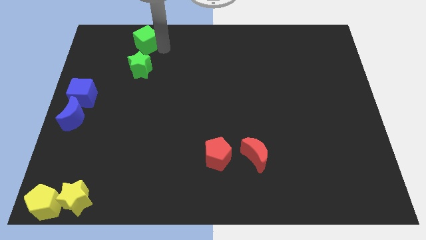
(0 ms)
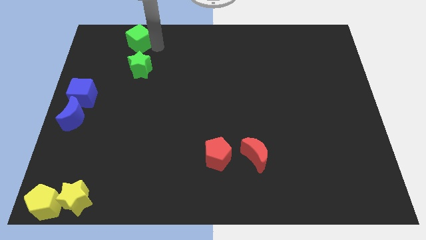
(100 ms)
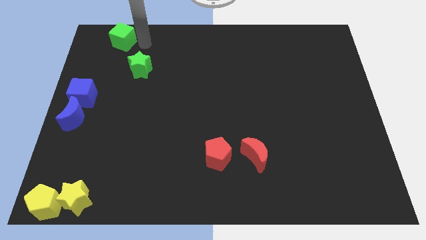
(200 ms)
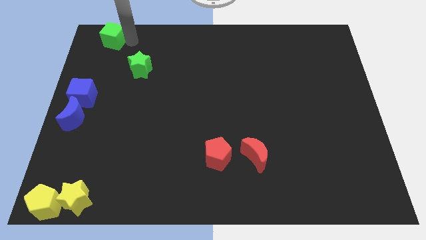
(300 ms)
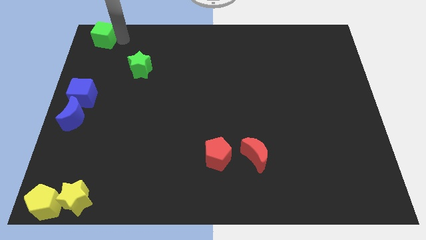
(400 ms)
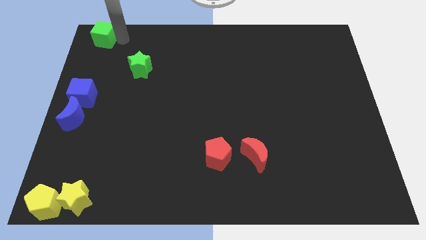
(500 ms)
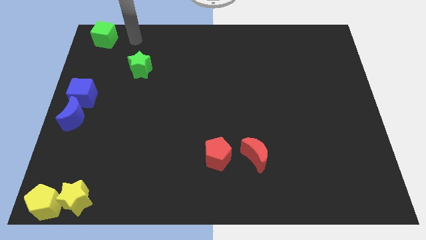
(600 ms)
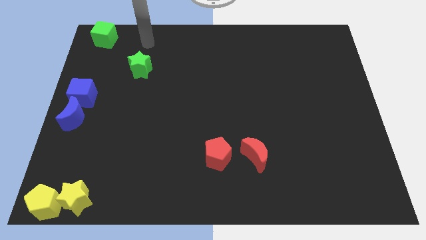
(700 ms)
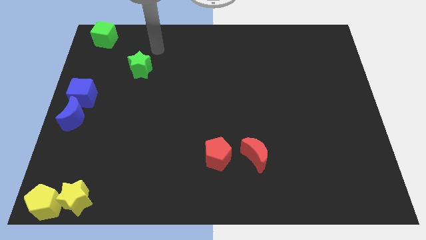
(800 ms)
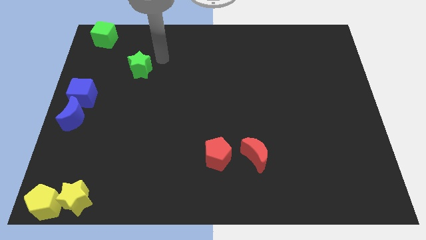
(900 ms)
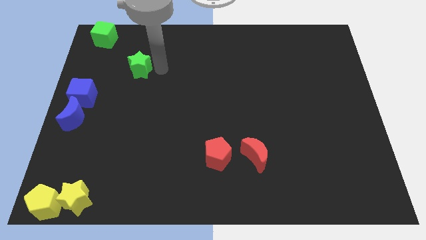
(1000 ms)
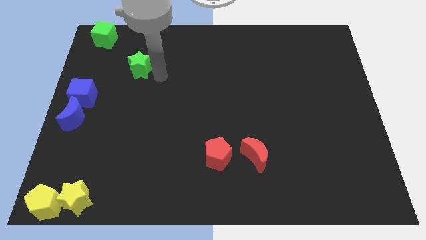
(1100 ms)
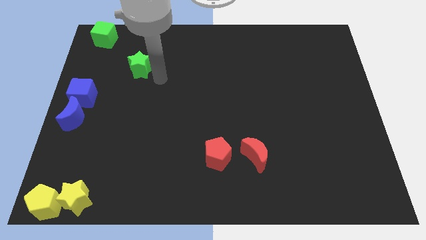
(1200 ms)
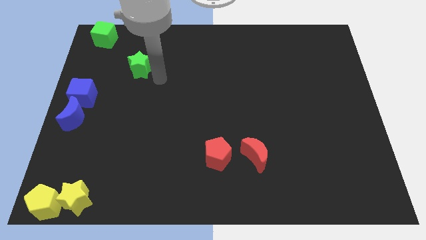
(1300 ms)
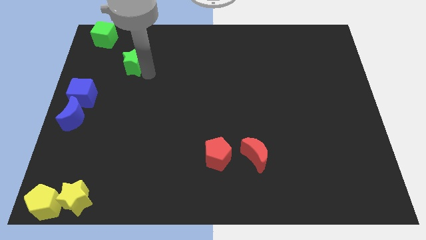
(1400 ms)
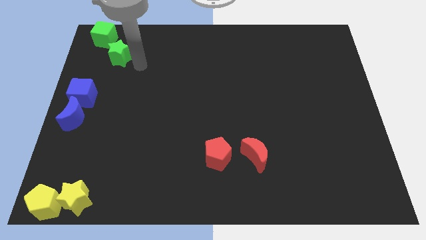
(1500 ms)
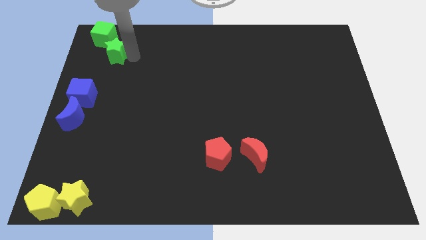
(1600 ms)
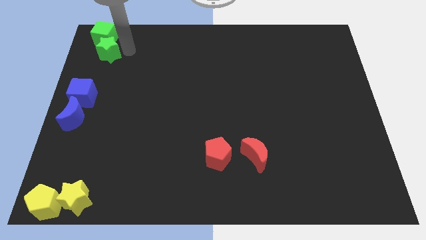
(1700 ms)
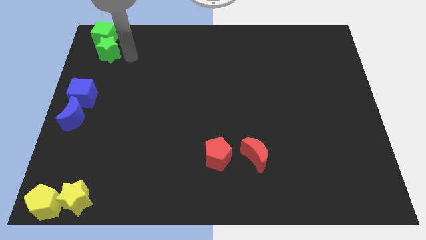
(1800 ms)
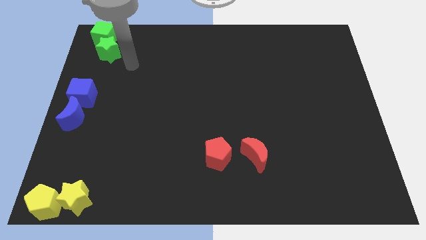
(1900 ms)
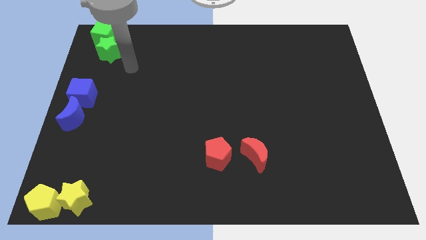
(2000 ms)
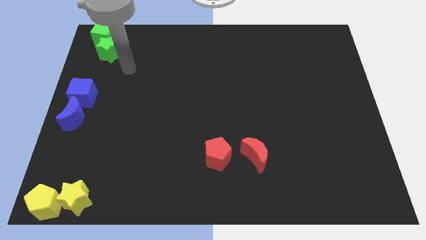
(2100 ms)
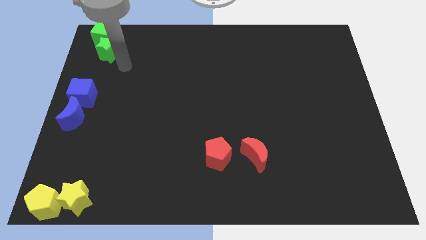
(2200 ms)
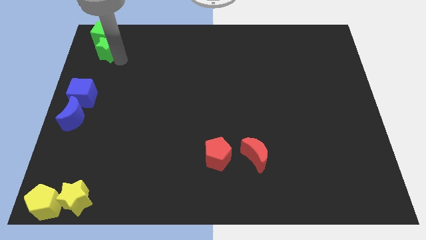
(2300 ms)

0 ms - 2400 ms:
push the green blocks to the top left

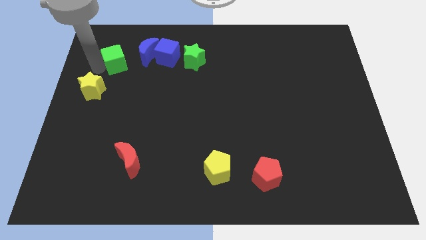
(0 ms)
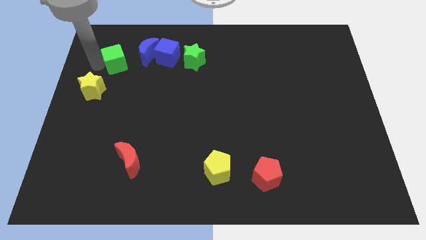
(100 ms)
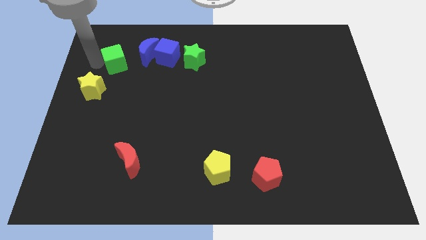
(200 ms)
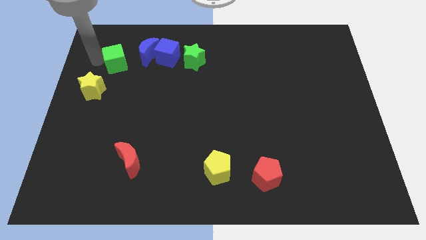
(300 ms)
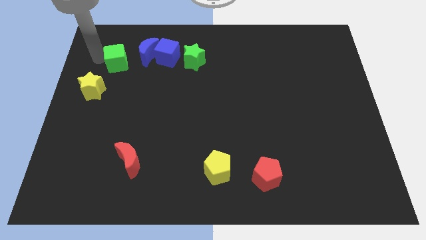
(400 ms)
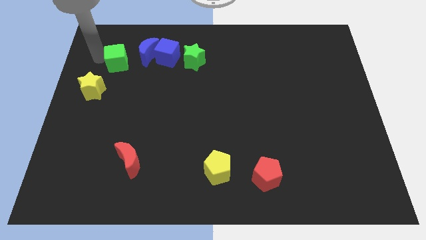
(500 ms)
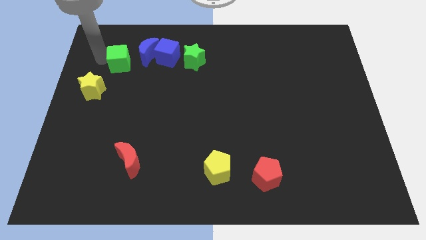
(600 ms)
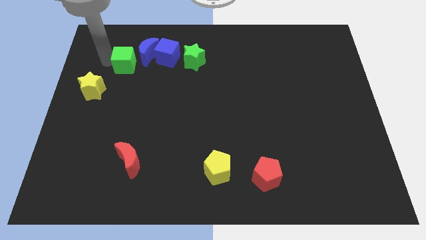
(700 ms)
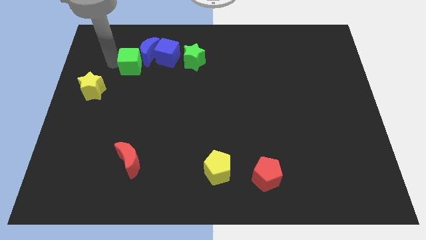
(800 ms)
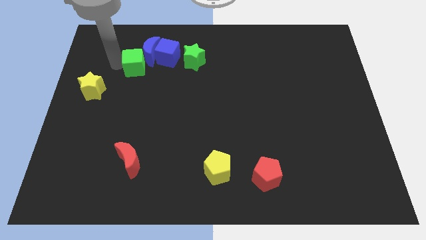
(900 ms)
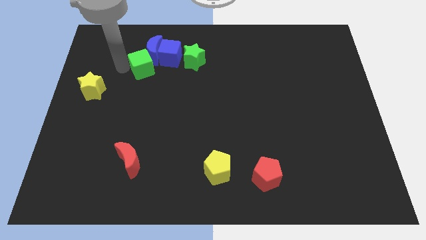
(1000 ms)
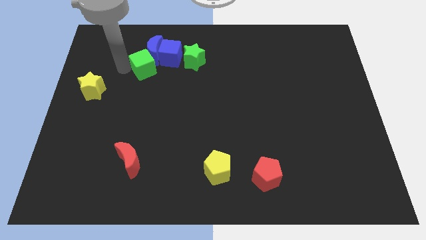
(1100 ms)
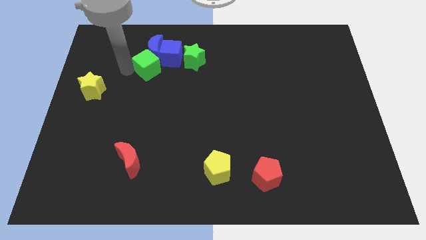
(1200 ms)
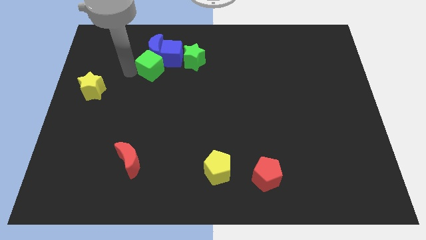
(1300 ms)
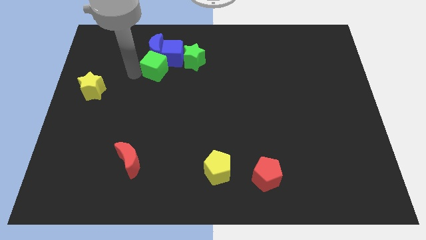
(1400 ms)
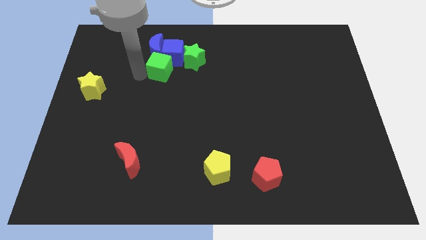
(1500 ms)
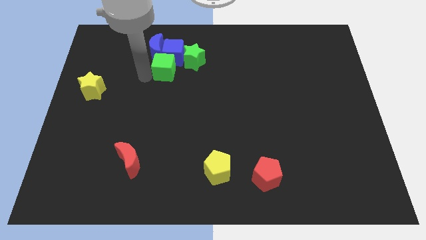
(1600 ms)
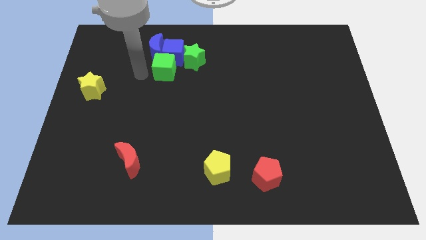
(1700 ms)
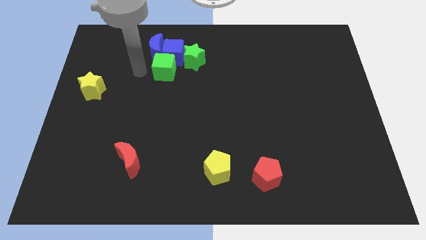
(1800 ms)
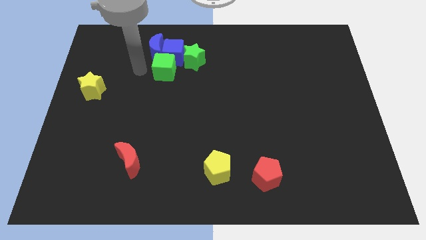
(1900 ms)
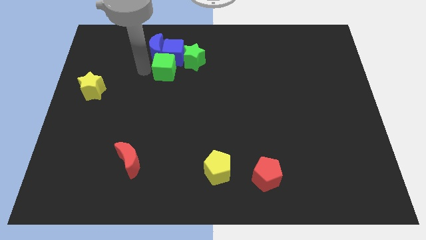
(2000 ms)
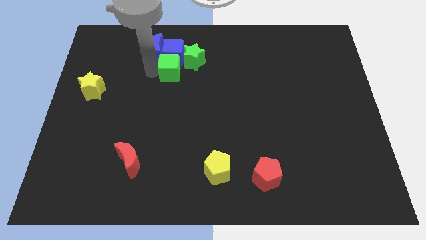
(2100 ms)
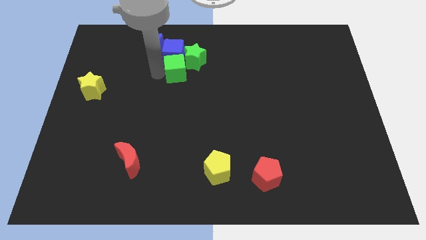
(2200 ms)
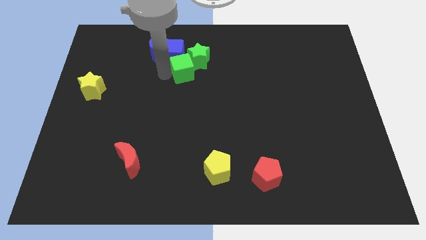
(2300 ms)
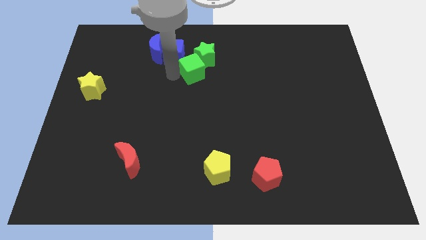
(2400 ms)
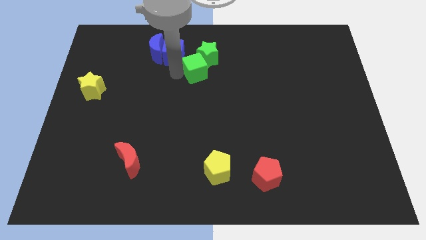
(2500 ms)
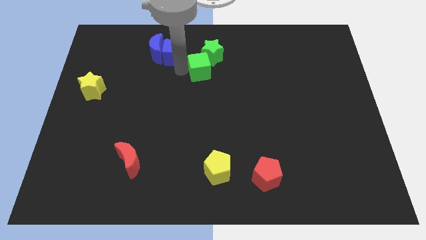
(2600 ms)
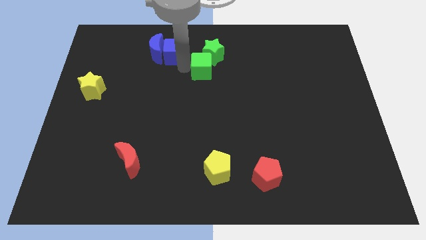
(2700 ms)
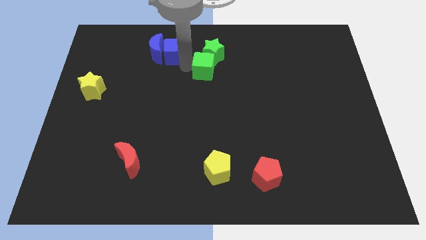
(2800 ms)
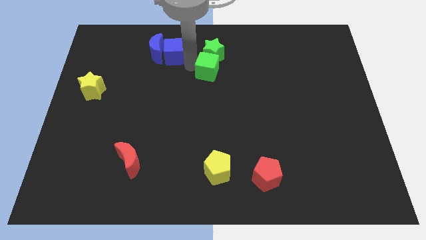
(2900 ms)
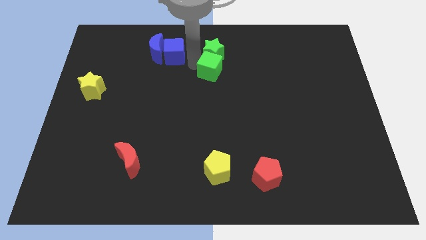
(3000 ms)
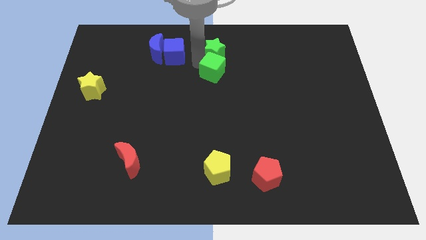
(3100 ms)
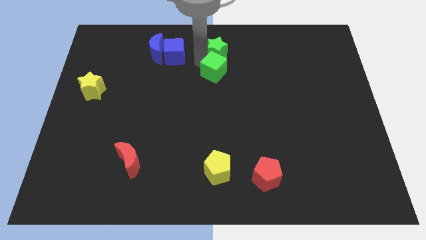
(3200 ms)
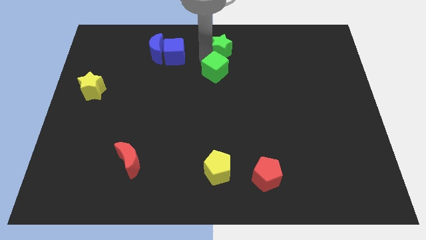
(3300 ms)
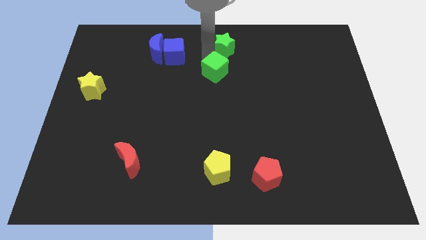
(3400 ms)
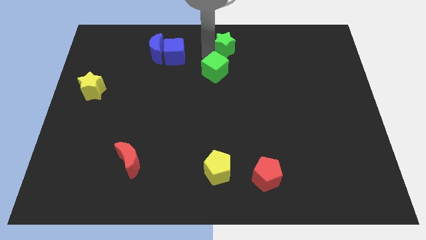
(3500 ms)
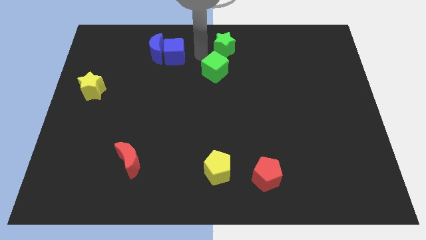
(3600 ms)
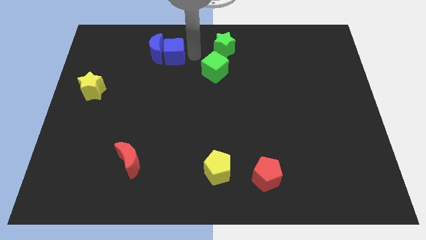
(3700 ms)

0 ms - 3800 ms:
move green blocks slightly right

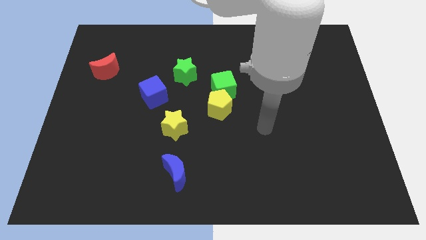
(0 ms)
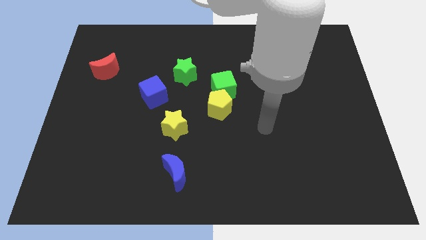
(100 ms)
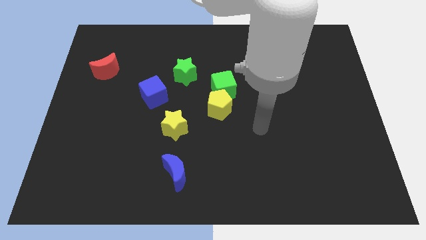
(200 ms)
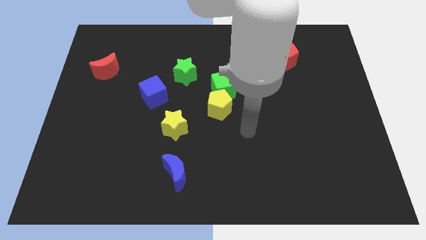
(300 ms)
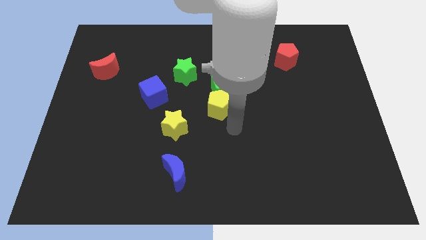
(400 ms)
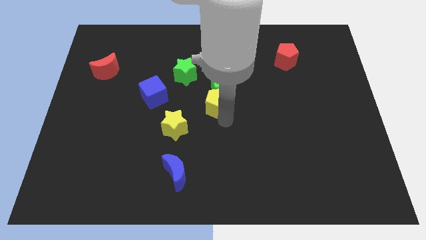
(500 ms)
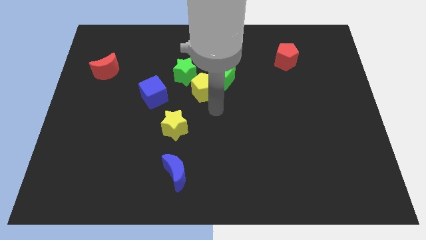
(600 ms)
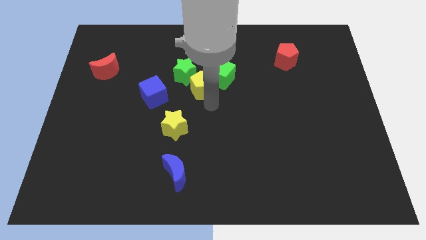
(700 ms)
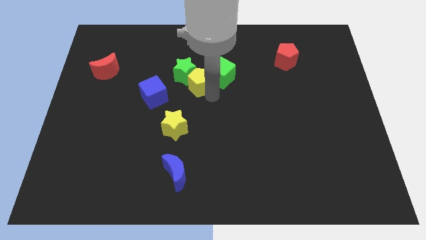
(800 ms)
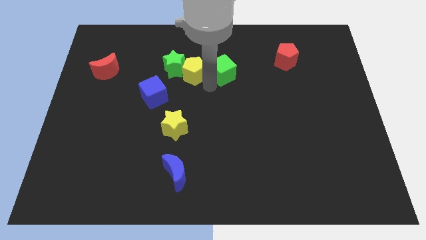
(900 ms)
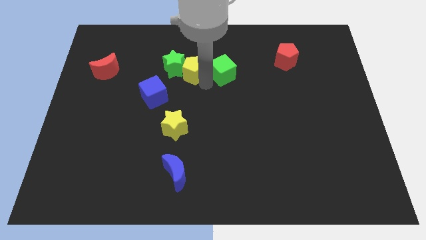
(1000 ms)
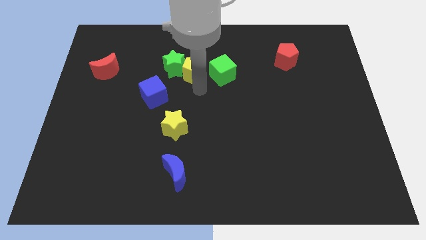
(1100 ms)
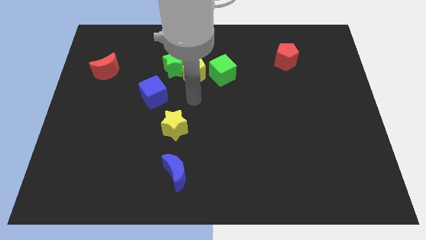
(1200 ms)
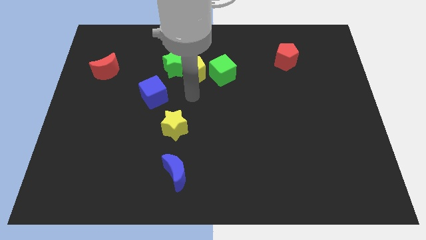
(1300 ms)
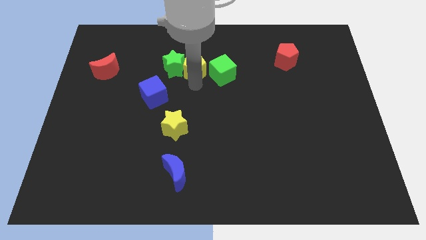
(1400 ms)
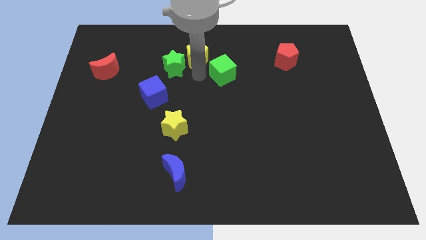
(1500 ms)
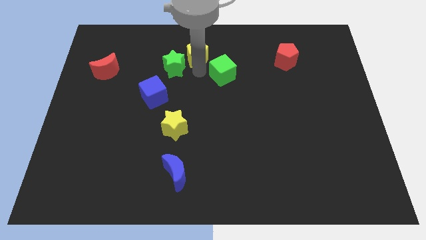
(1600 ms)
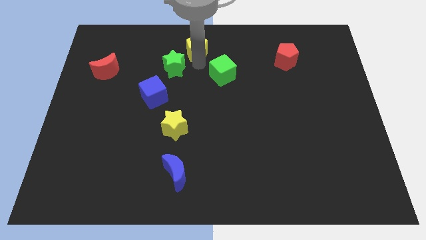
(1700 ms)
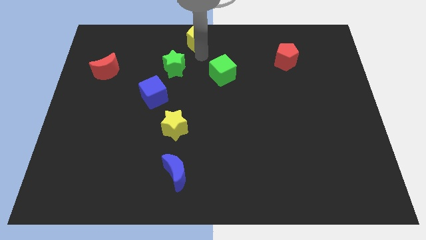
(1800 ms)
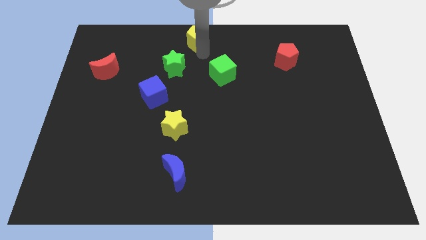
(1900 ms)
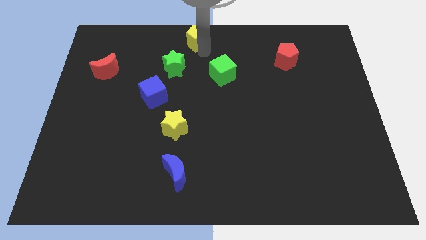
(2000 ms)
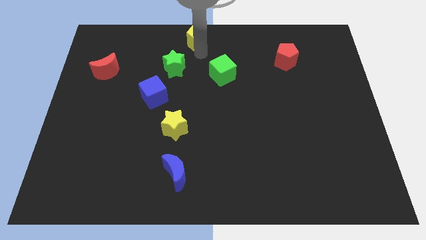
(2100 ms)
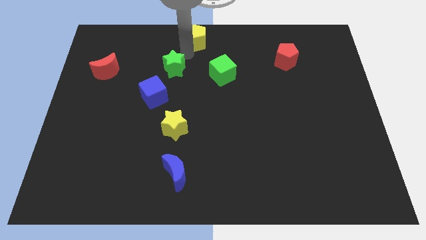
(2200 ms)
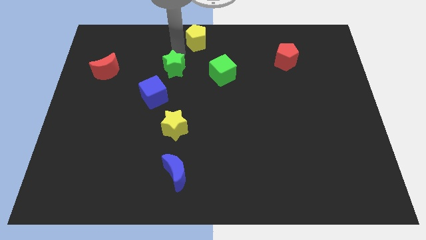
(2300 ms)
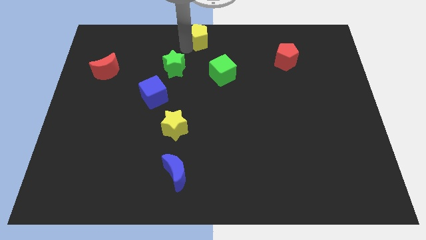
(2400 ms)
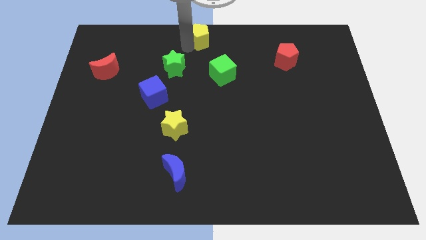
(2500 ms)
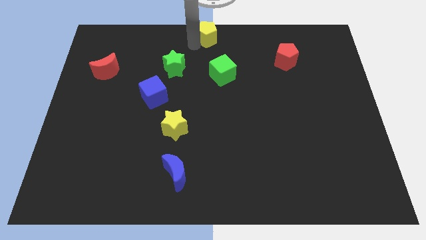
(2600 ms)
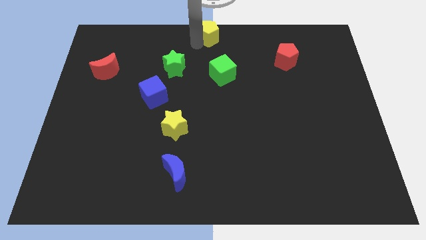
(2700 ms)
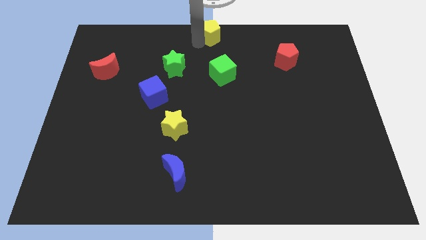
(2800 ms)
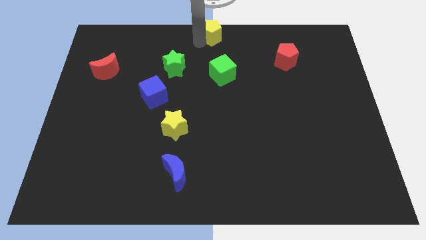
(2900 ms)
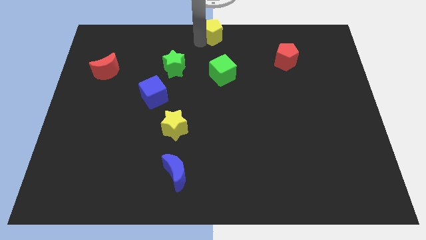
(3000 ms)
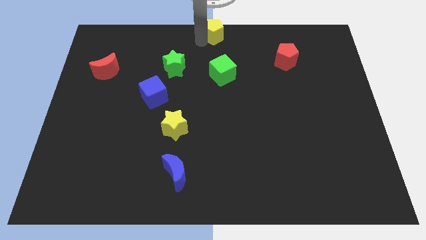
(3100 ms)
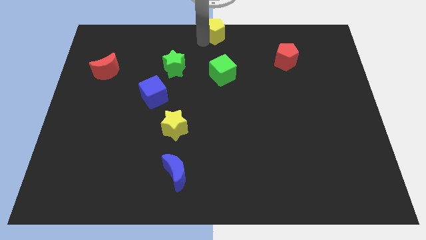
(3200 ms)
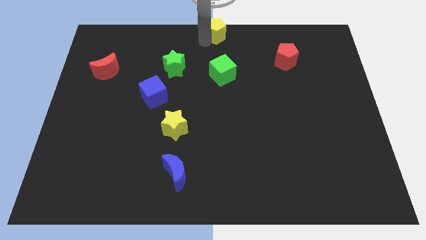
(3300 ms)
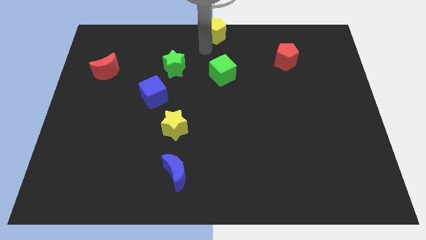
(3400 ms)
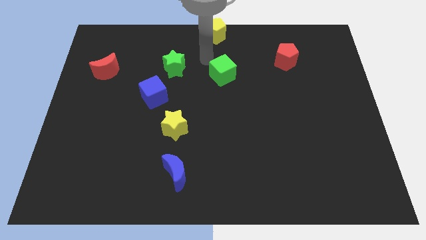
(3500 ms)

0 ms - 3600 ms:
move the yellow pentagon towards the top centre of the board
